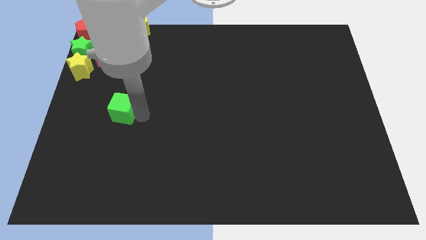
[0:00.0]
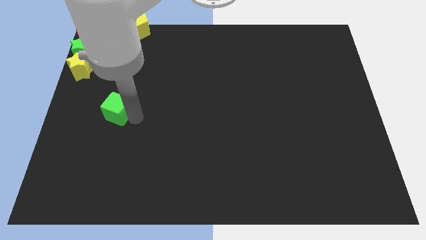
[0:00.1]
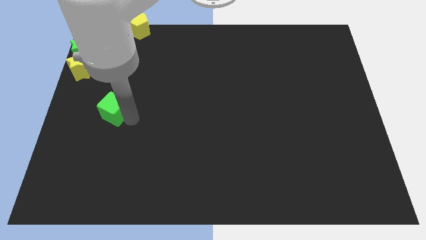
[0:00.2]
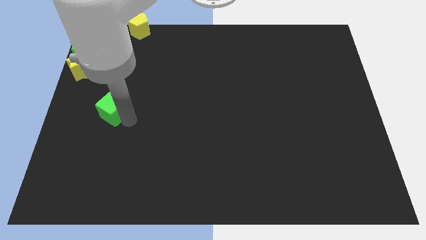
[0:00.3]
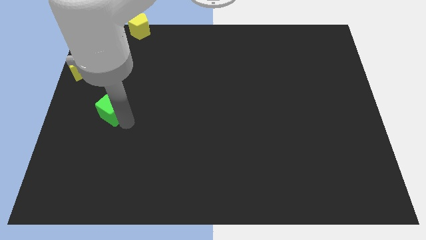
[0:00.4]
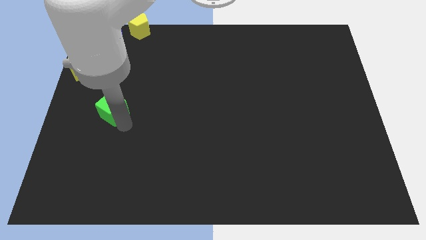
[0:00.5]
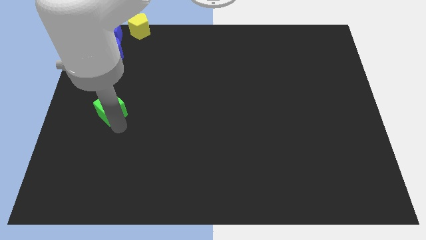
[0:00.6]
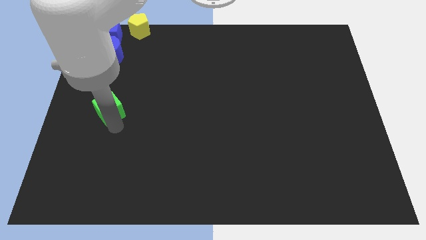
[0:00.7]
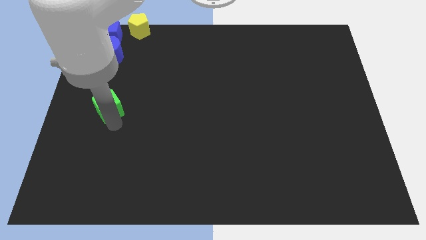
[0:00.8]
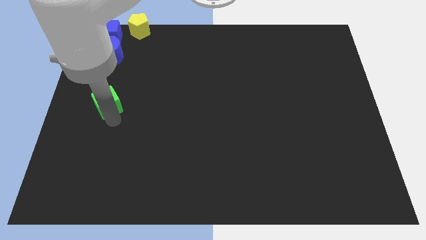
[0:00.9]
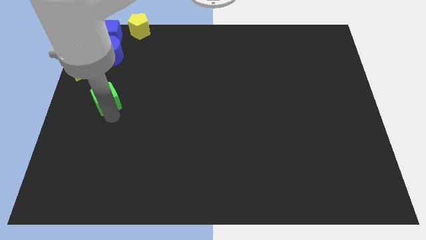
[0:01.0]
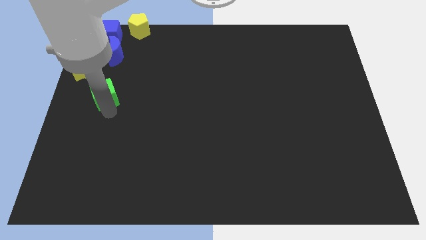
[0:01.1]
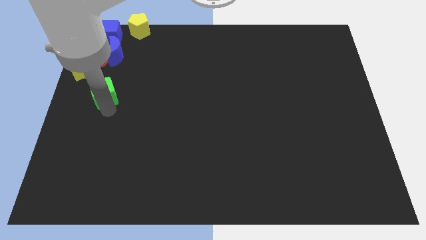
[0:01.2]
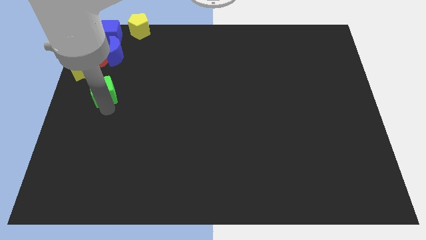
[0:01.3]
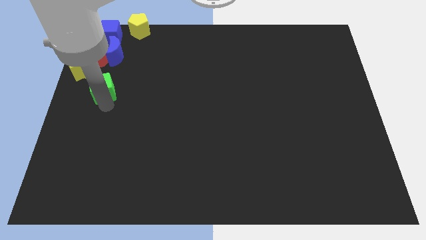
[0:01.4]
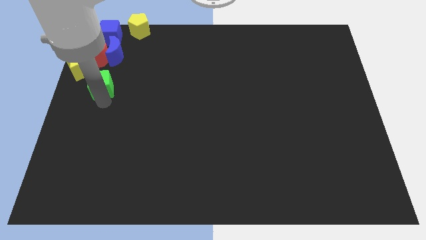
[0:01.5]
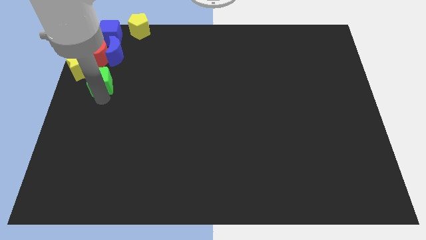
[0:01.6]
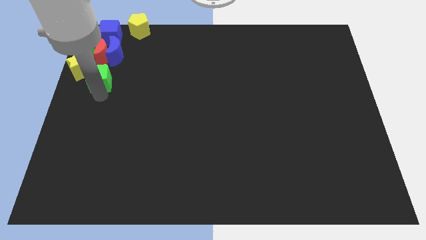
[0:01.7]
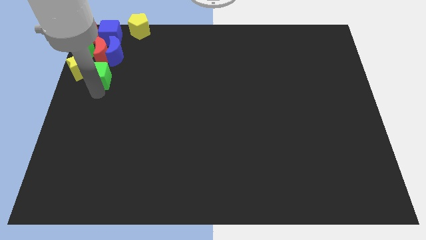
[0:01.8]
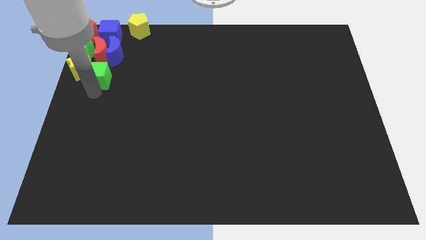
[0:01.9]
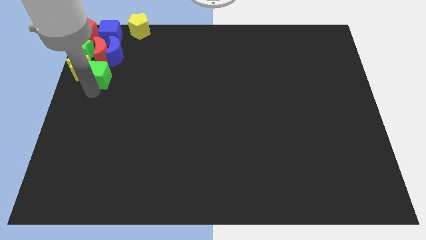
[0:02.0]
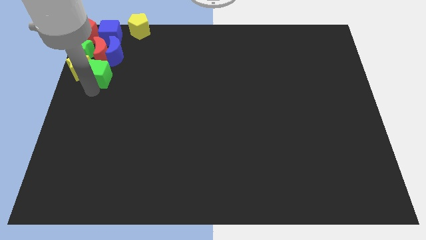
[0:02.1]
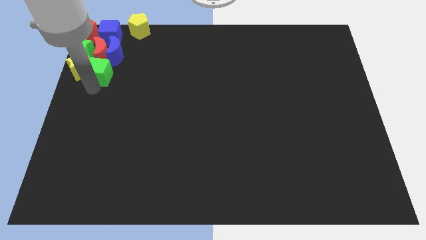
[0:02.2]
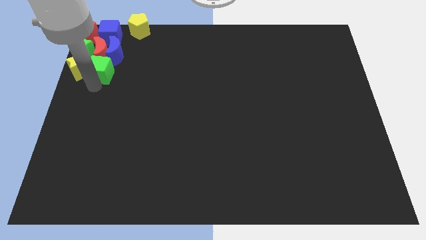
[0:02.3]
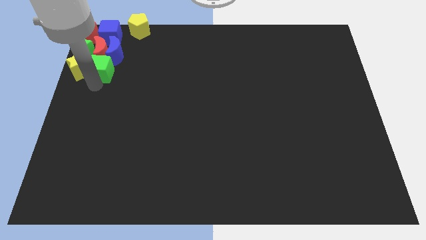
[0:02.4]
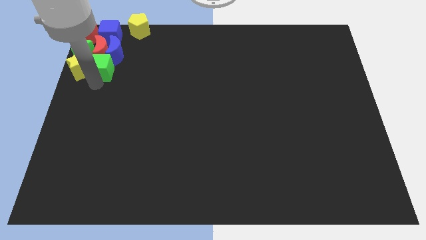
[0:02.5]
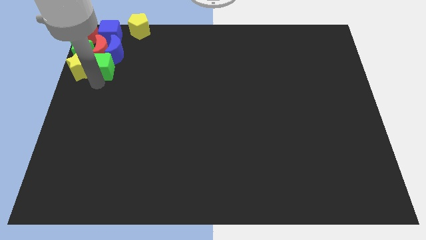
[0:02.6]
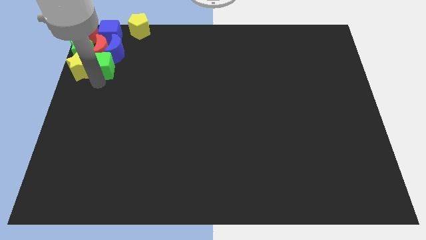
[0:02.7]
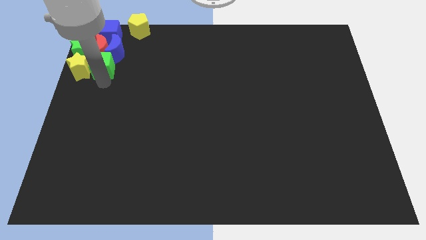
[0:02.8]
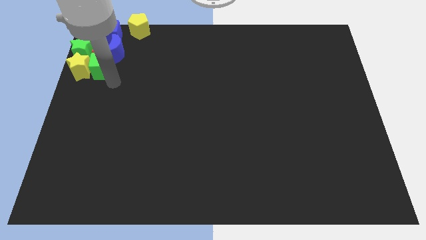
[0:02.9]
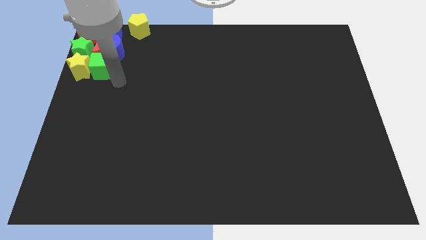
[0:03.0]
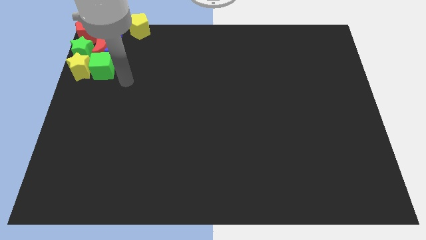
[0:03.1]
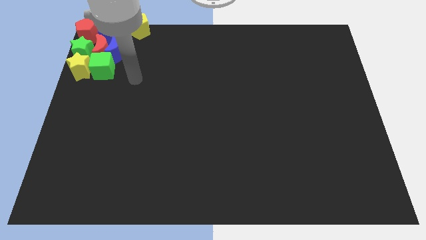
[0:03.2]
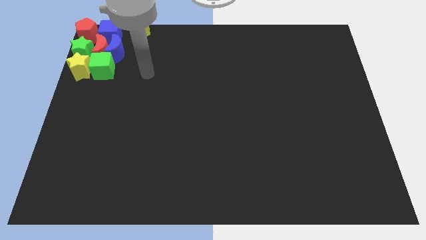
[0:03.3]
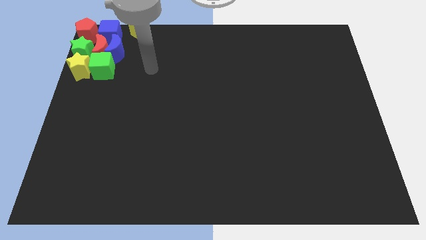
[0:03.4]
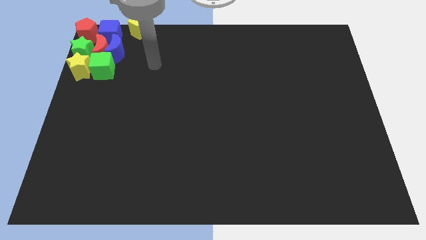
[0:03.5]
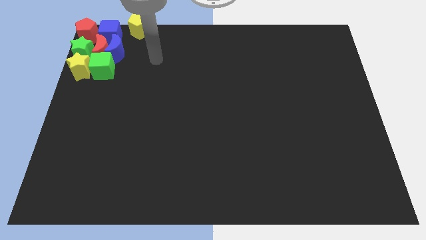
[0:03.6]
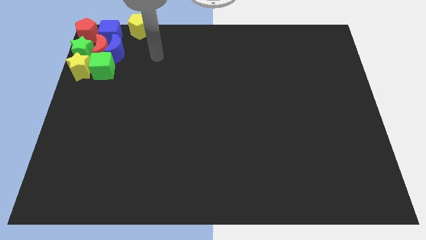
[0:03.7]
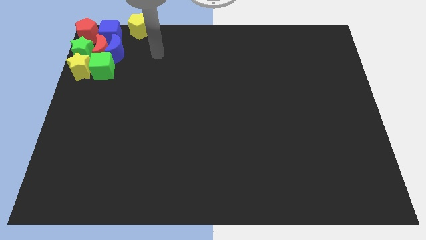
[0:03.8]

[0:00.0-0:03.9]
push green cube into group of blocks

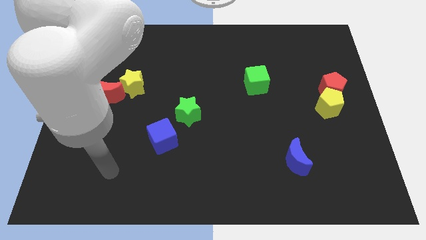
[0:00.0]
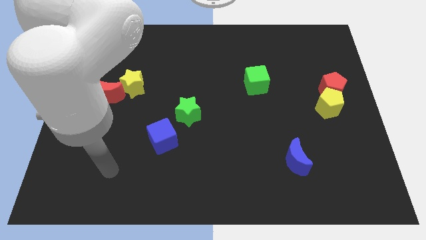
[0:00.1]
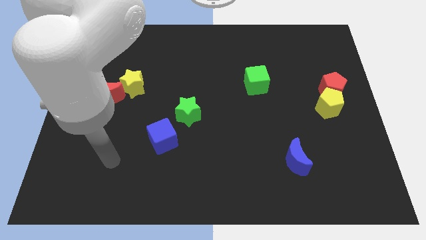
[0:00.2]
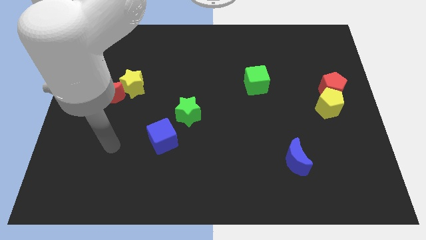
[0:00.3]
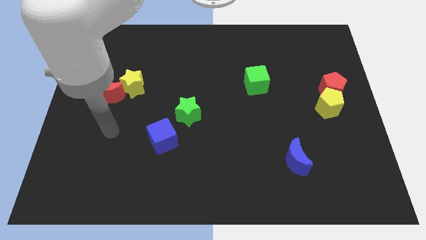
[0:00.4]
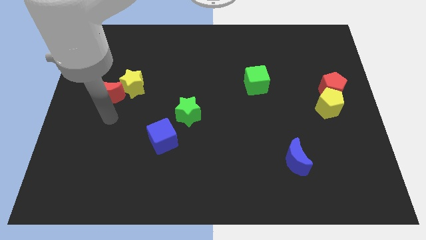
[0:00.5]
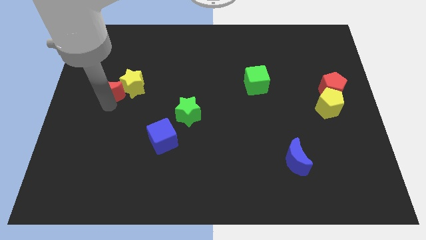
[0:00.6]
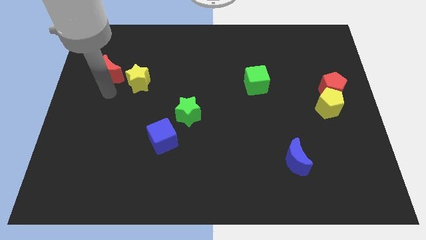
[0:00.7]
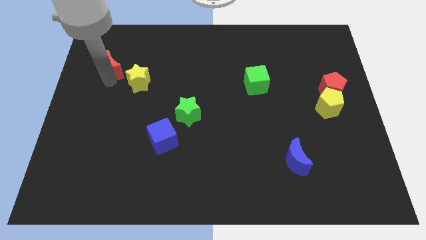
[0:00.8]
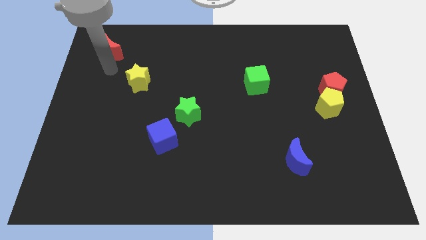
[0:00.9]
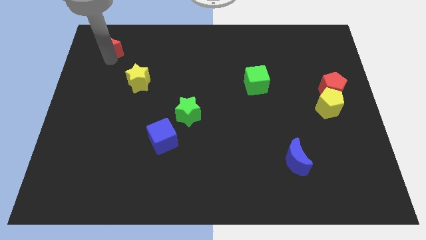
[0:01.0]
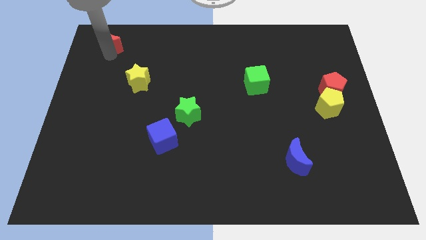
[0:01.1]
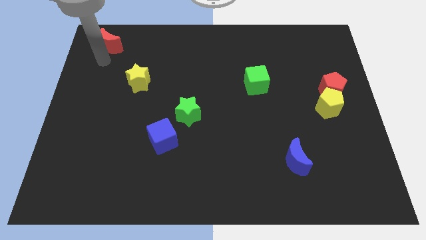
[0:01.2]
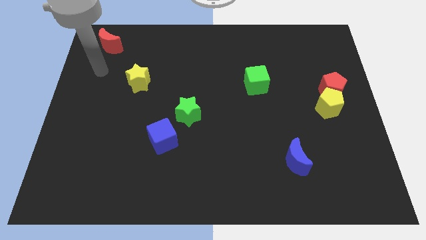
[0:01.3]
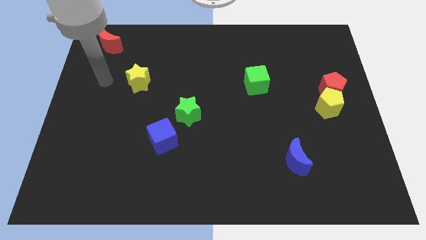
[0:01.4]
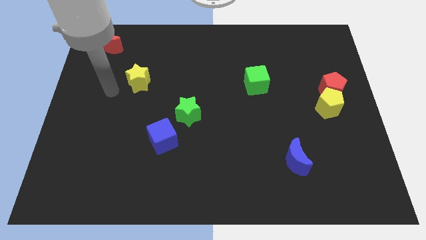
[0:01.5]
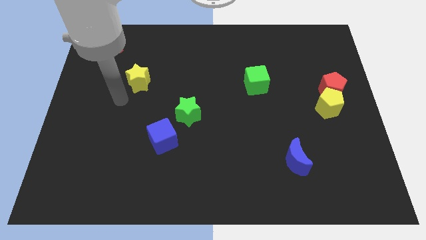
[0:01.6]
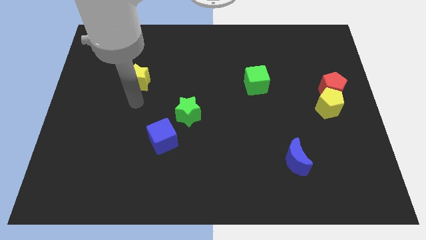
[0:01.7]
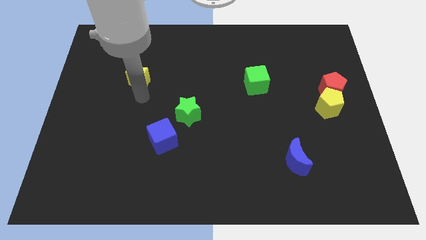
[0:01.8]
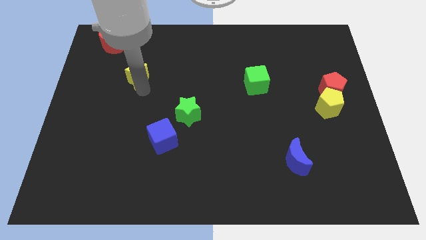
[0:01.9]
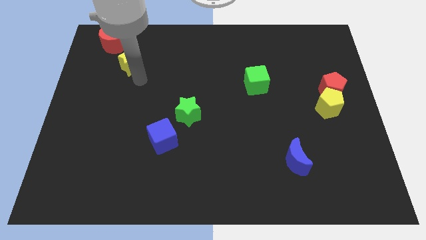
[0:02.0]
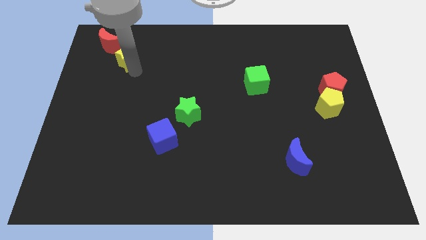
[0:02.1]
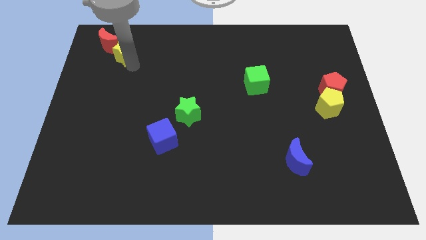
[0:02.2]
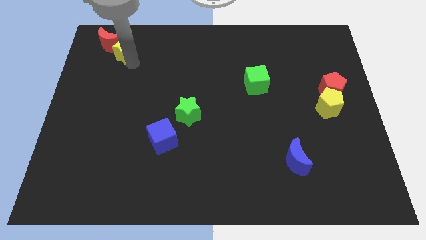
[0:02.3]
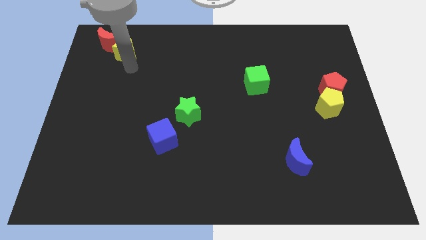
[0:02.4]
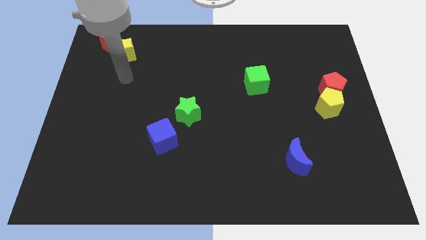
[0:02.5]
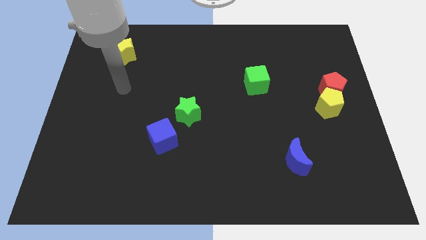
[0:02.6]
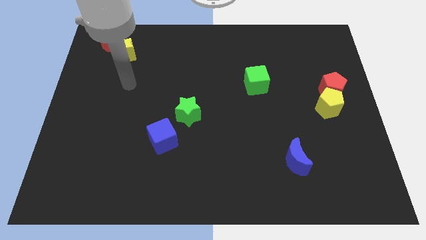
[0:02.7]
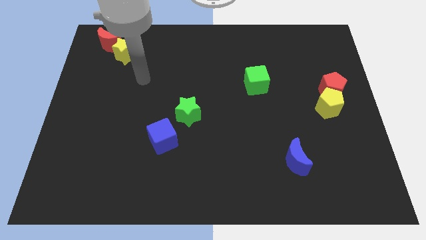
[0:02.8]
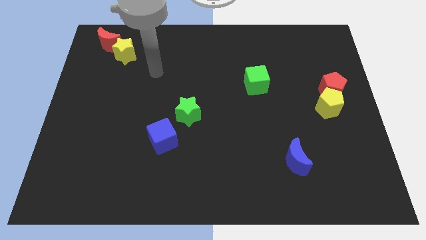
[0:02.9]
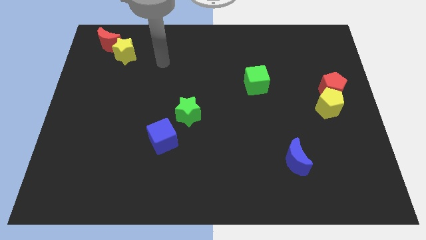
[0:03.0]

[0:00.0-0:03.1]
put the yellow star and the red crescent to the top left side of the table

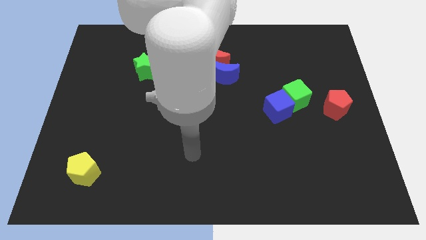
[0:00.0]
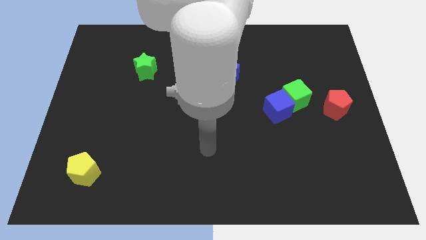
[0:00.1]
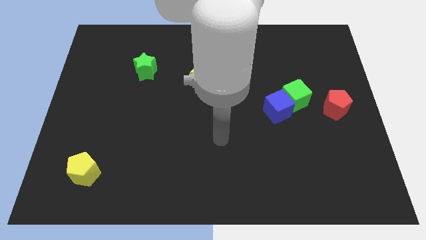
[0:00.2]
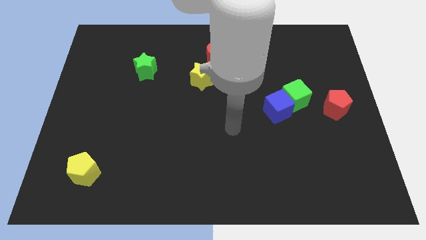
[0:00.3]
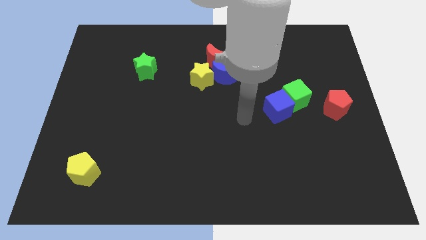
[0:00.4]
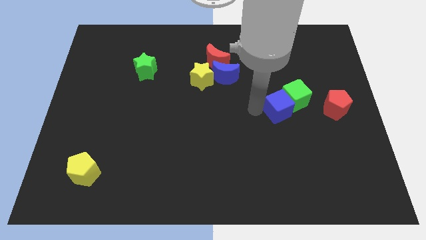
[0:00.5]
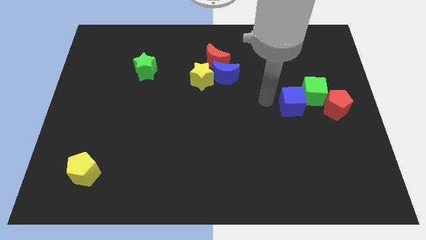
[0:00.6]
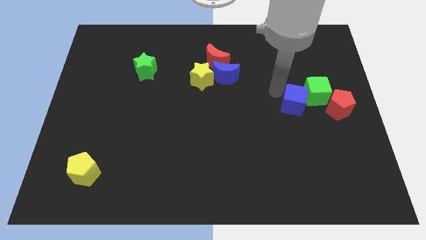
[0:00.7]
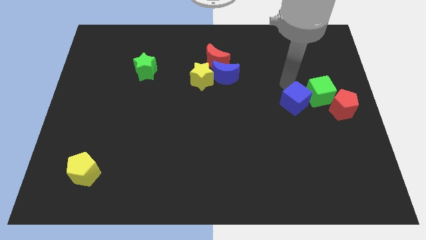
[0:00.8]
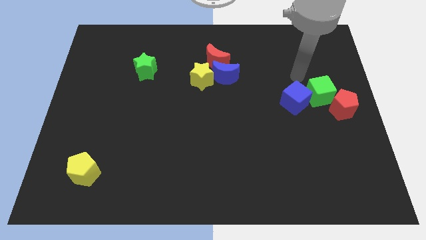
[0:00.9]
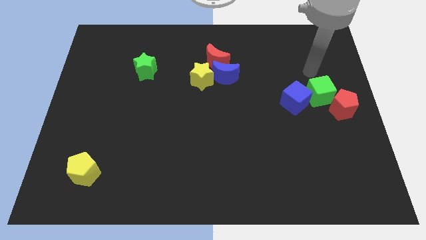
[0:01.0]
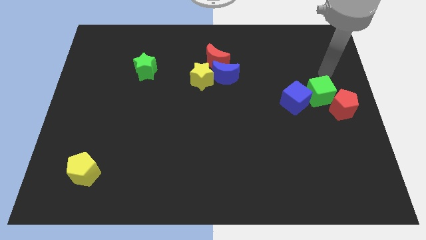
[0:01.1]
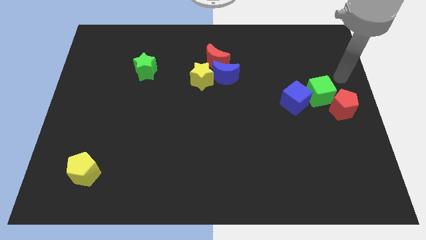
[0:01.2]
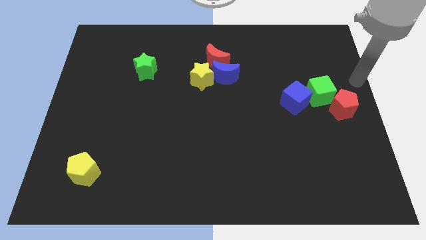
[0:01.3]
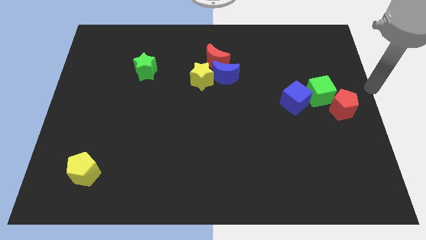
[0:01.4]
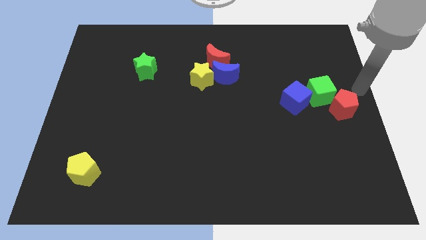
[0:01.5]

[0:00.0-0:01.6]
push the blue cube to the left of the green cube

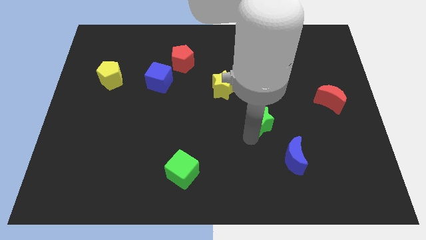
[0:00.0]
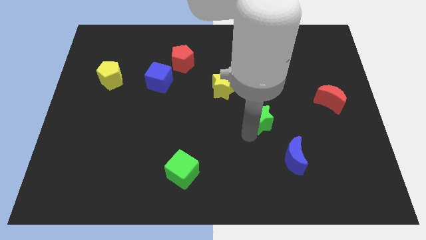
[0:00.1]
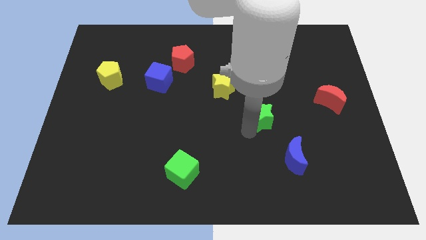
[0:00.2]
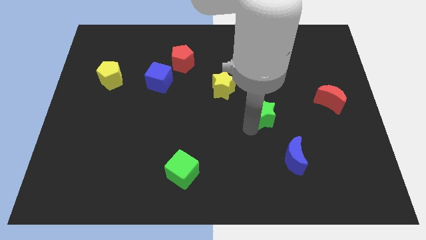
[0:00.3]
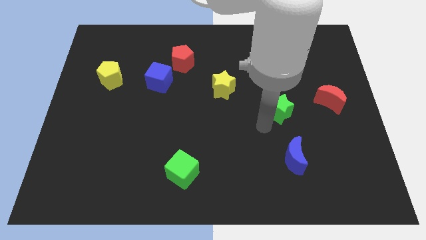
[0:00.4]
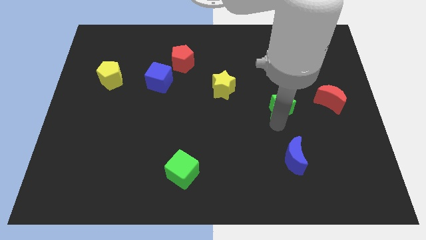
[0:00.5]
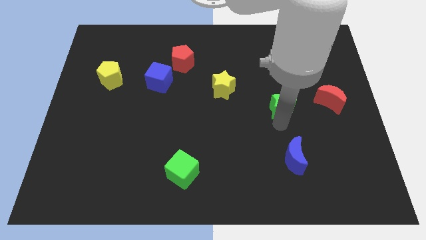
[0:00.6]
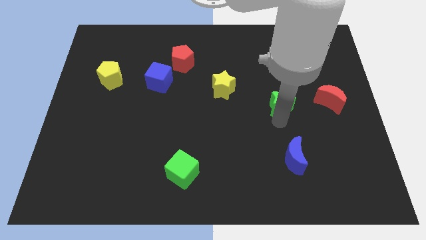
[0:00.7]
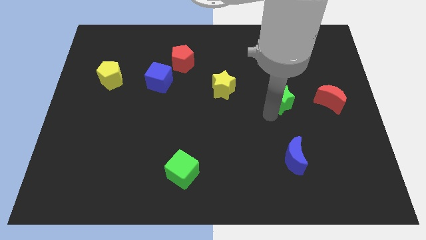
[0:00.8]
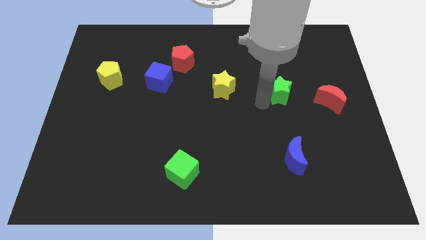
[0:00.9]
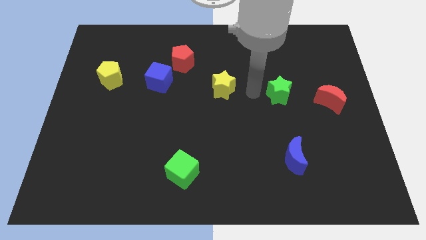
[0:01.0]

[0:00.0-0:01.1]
move green star in between yellow star and red crescent
